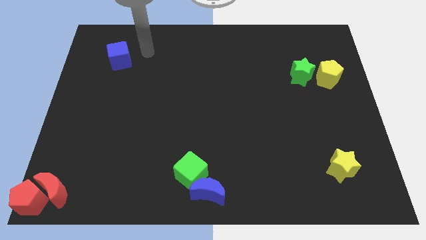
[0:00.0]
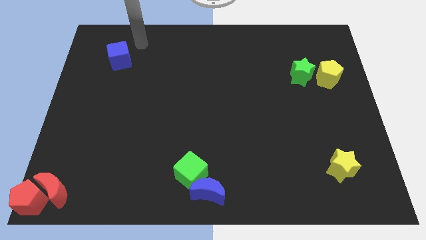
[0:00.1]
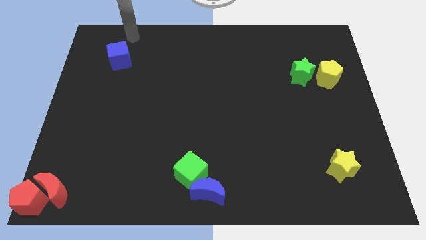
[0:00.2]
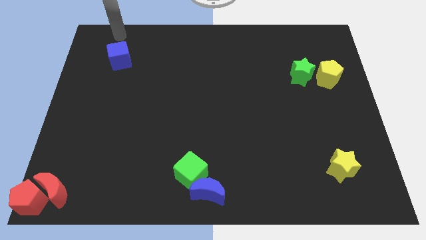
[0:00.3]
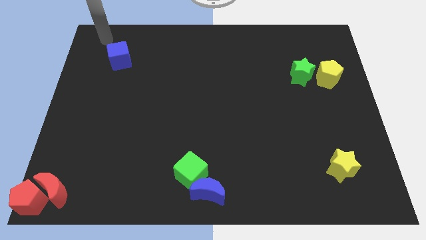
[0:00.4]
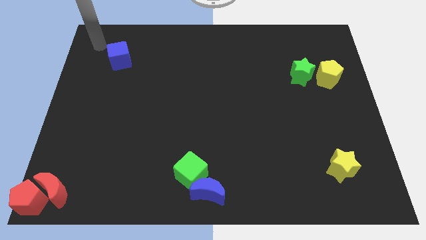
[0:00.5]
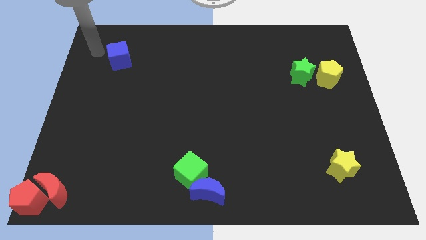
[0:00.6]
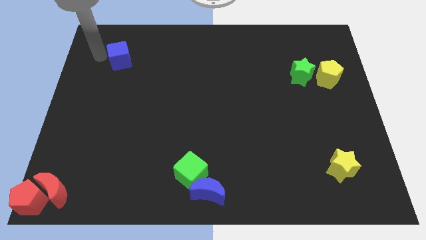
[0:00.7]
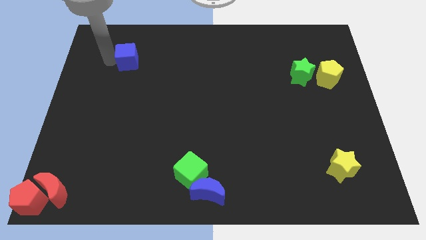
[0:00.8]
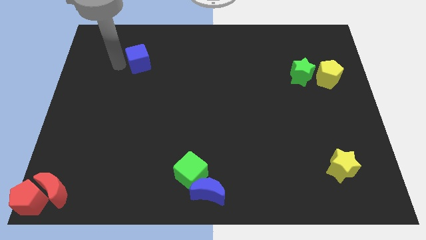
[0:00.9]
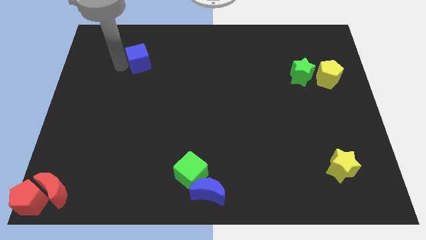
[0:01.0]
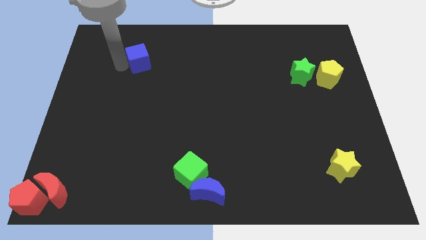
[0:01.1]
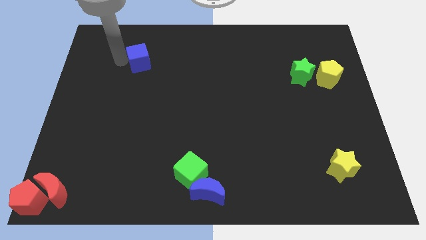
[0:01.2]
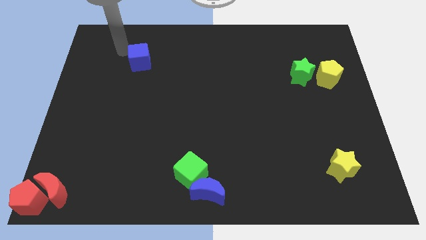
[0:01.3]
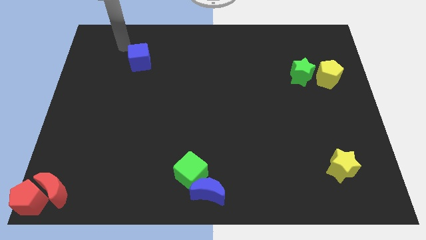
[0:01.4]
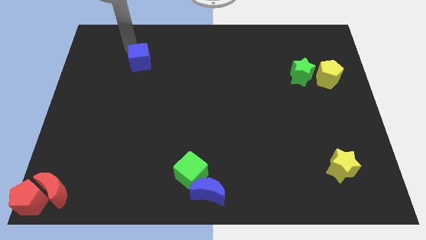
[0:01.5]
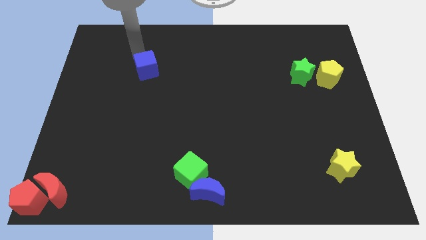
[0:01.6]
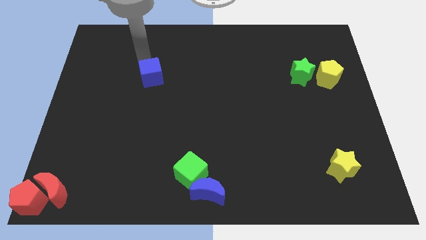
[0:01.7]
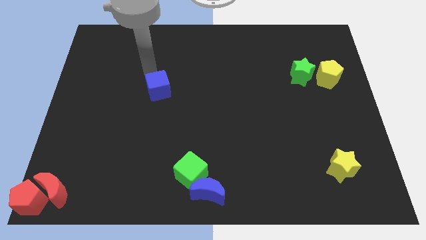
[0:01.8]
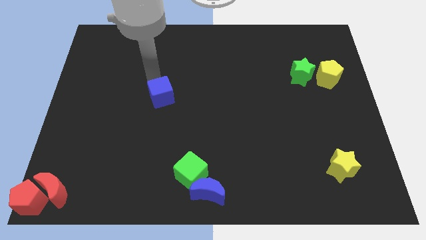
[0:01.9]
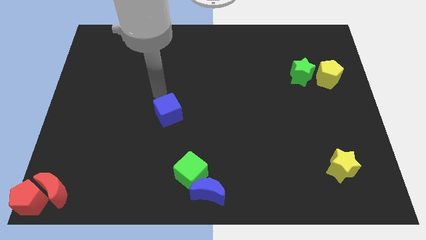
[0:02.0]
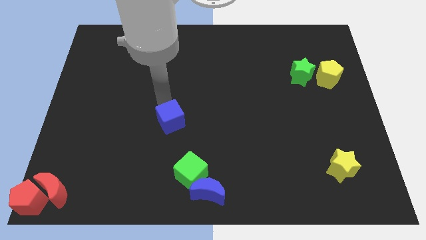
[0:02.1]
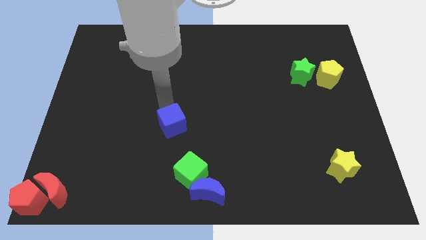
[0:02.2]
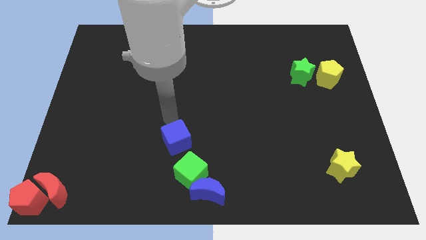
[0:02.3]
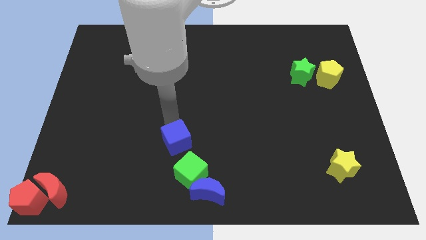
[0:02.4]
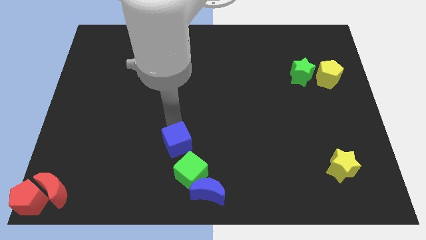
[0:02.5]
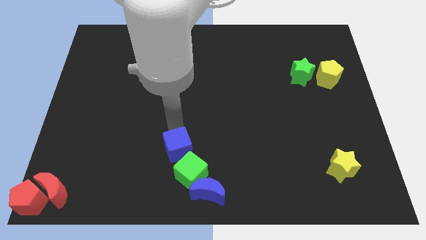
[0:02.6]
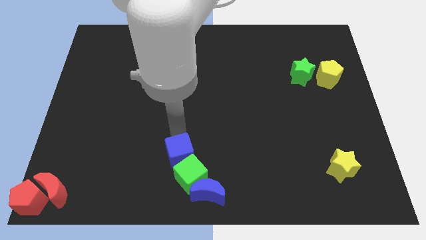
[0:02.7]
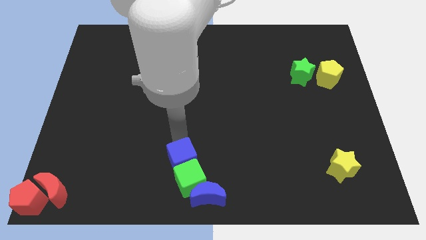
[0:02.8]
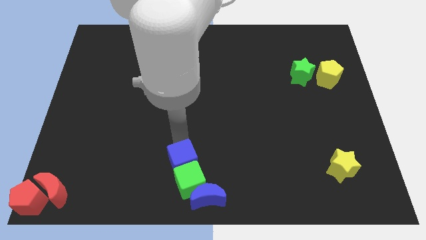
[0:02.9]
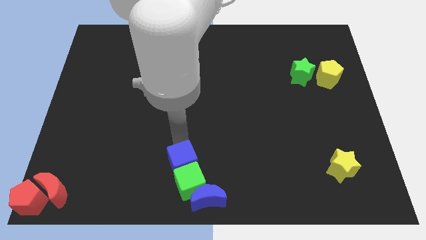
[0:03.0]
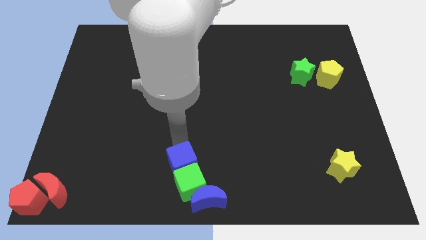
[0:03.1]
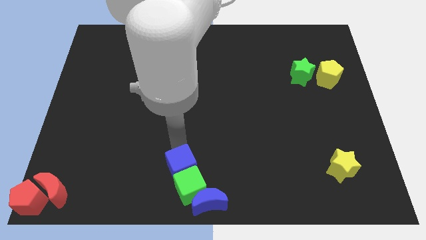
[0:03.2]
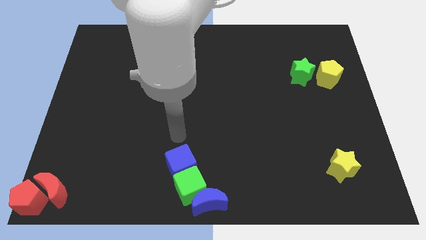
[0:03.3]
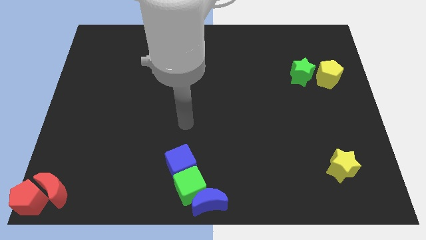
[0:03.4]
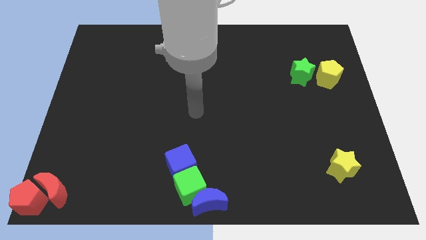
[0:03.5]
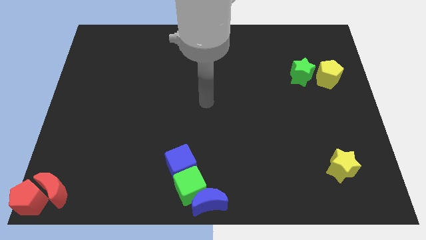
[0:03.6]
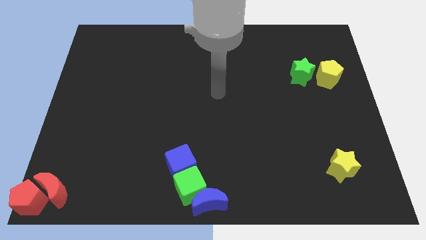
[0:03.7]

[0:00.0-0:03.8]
push blue cube into green cube

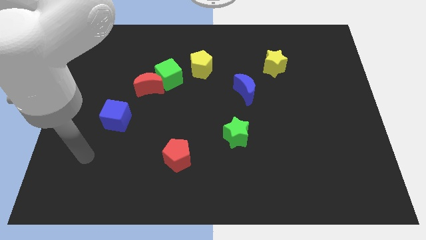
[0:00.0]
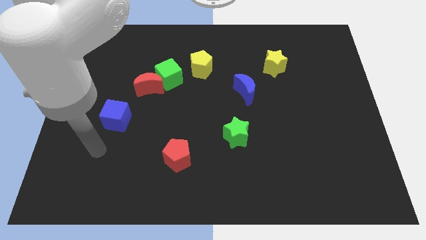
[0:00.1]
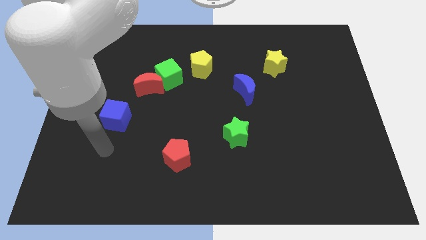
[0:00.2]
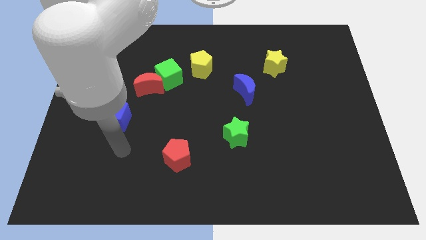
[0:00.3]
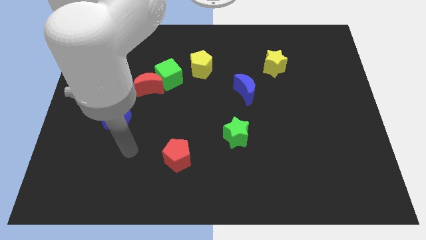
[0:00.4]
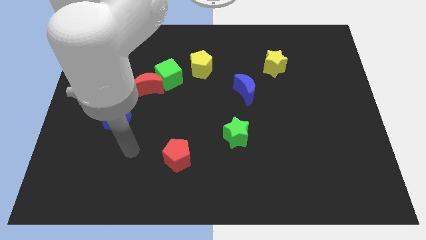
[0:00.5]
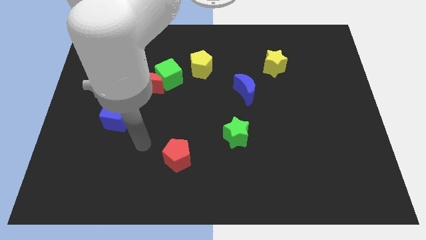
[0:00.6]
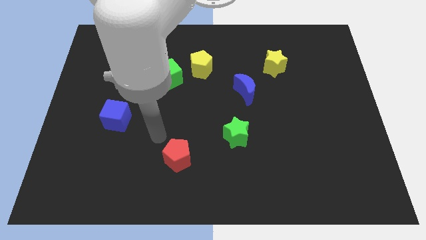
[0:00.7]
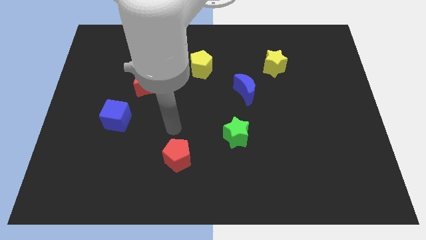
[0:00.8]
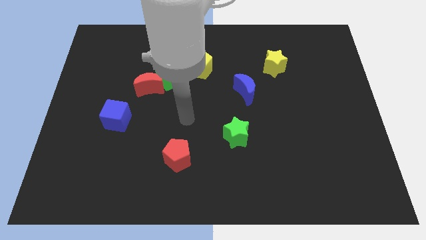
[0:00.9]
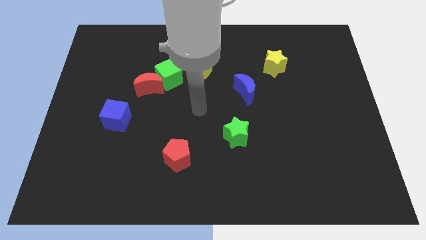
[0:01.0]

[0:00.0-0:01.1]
move the arm towards the blue crescent

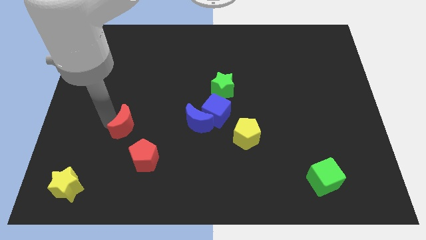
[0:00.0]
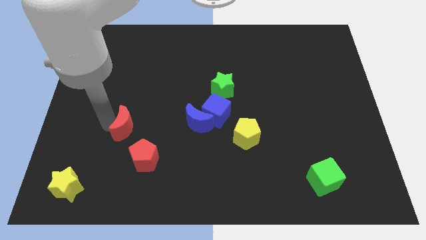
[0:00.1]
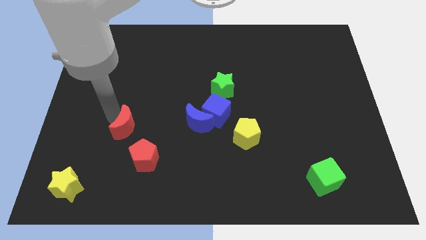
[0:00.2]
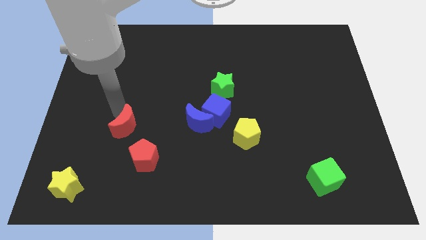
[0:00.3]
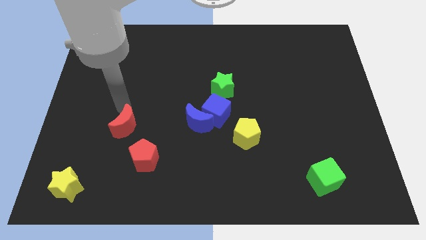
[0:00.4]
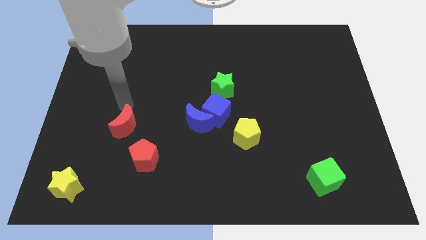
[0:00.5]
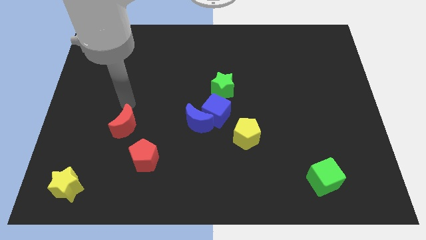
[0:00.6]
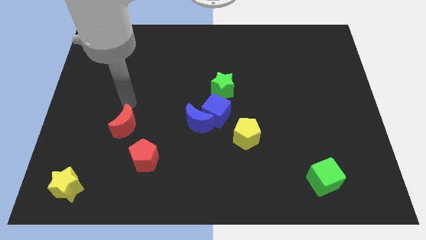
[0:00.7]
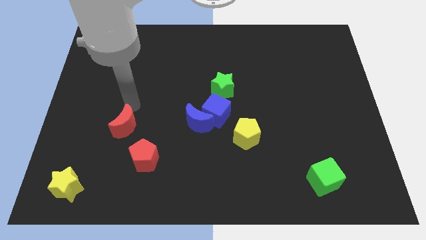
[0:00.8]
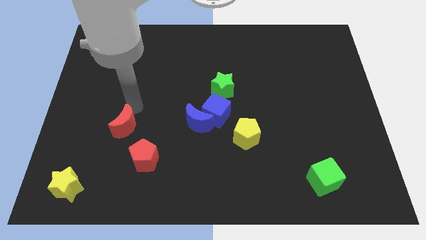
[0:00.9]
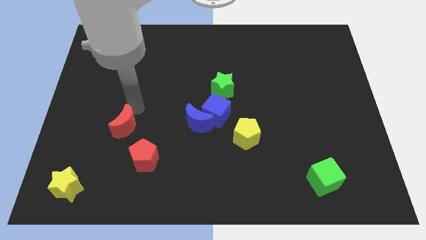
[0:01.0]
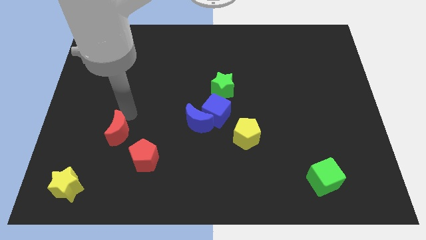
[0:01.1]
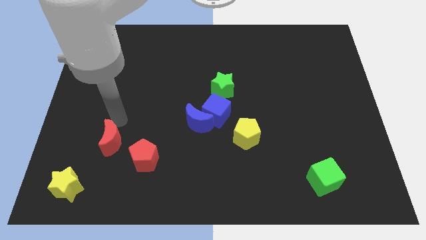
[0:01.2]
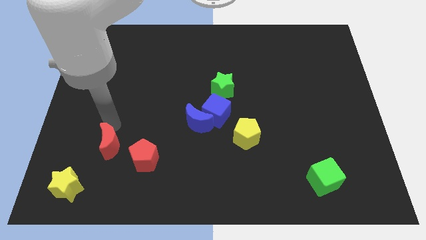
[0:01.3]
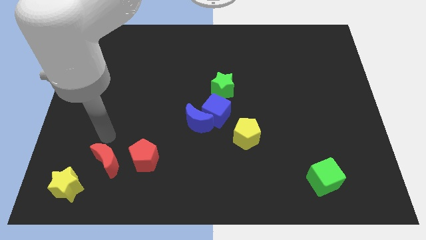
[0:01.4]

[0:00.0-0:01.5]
put the red moon left to the red pentagon

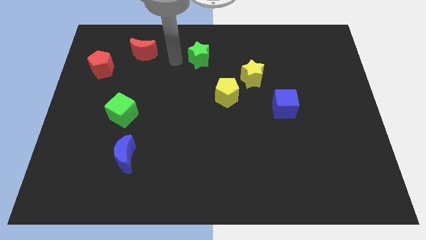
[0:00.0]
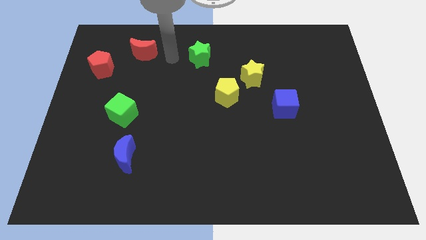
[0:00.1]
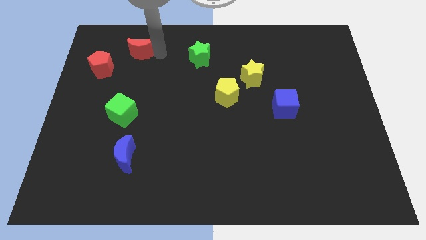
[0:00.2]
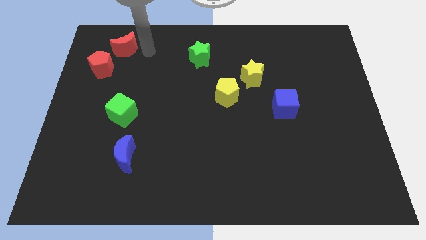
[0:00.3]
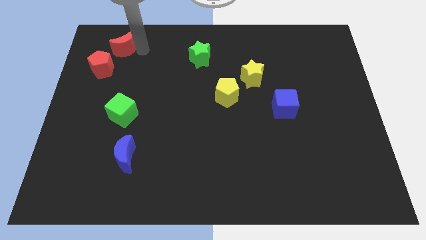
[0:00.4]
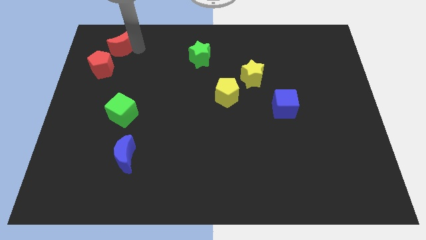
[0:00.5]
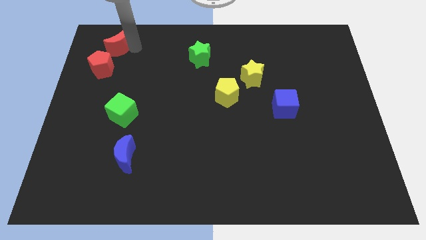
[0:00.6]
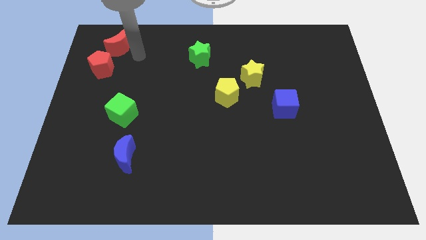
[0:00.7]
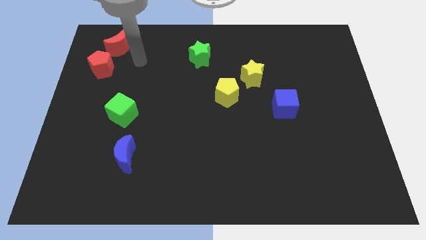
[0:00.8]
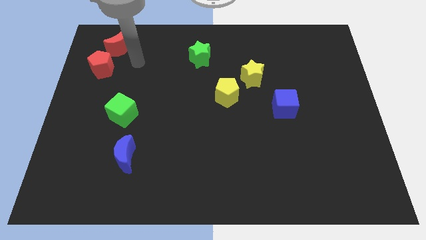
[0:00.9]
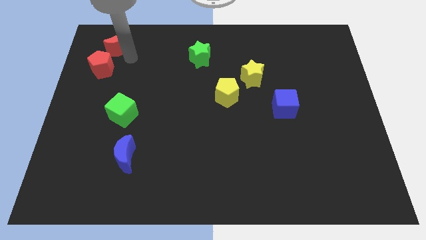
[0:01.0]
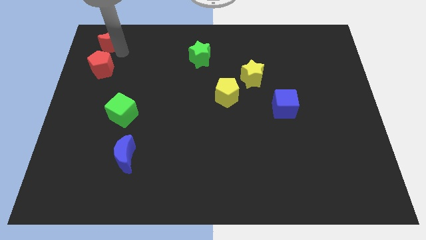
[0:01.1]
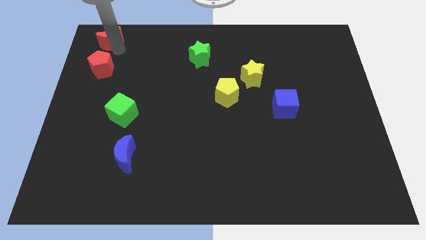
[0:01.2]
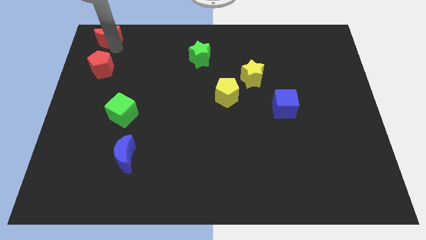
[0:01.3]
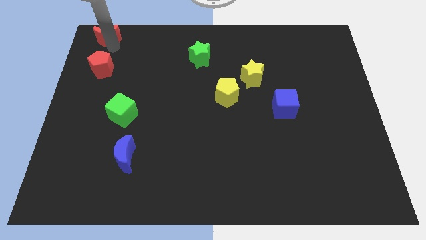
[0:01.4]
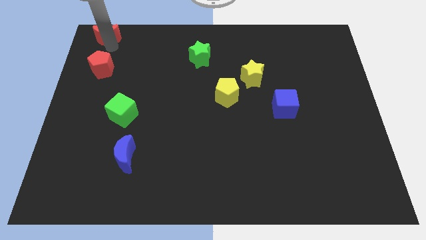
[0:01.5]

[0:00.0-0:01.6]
place red moon above red pentagon

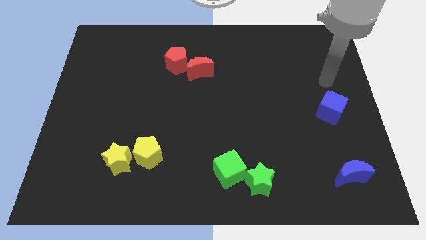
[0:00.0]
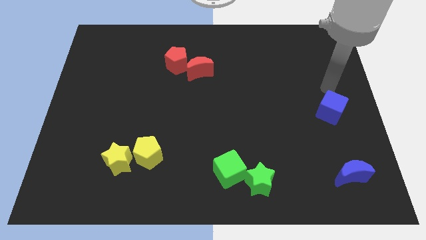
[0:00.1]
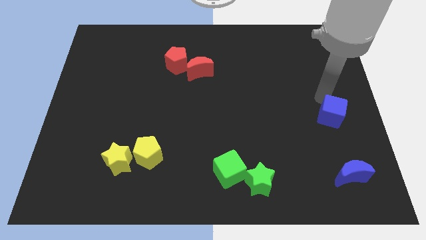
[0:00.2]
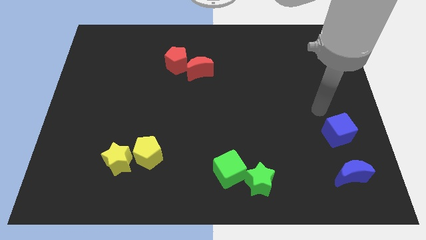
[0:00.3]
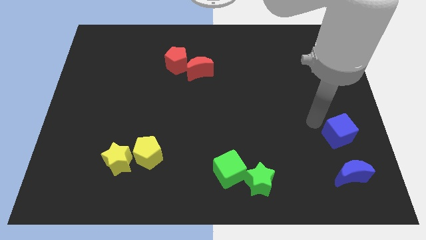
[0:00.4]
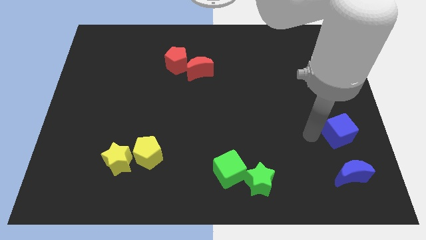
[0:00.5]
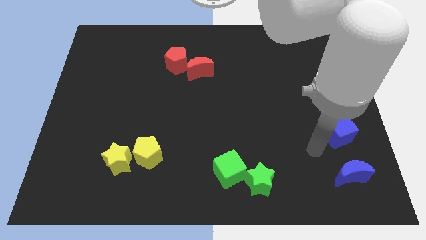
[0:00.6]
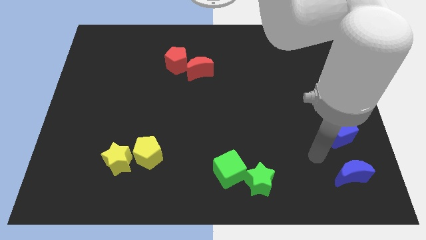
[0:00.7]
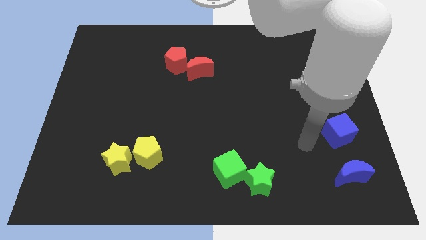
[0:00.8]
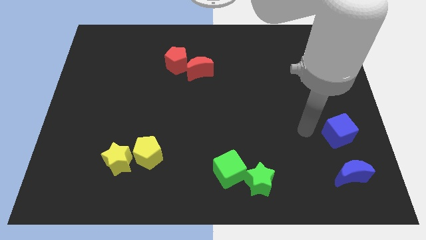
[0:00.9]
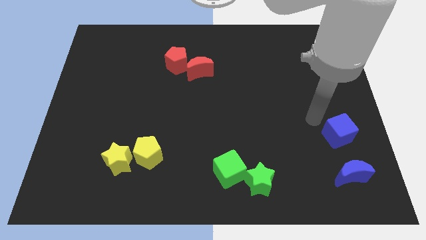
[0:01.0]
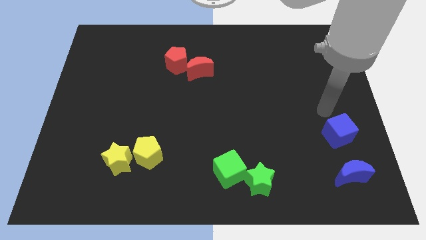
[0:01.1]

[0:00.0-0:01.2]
push the blue cube near the blue crescent
